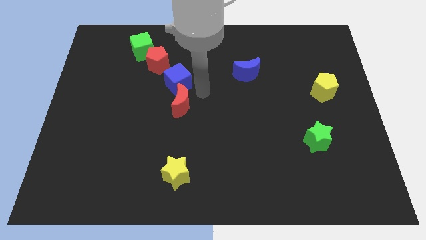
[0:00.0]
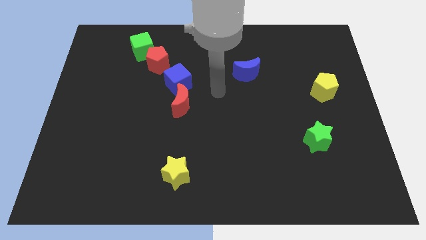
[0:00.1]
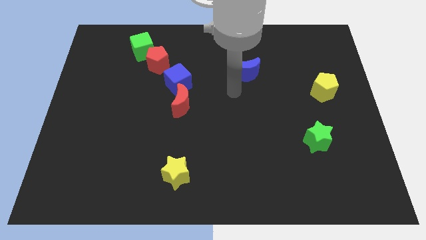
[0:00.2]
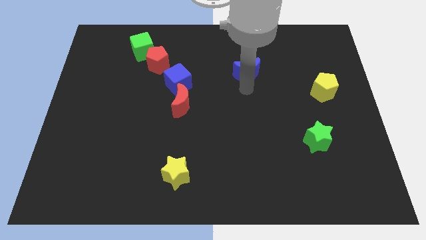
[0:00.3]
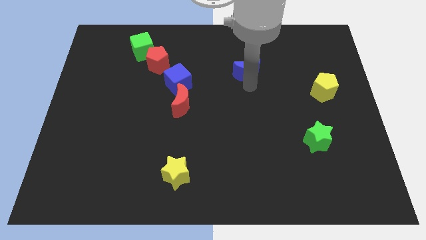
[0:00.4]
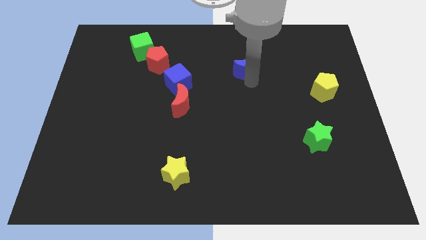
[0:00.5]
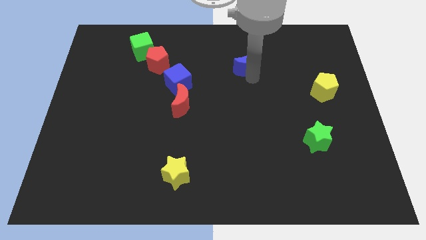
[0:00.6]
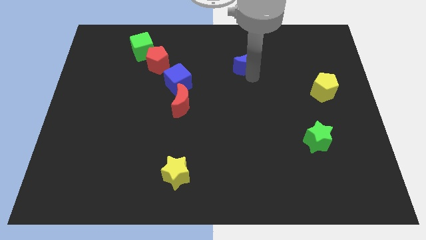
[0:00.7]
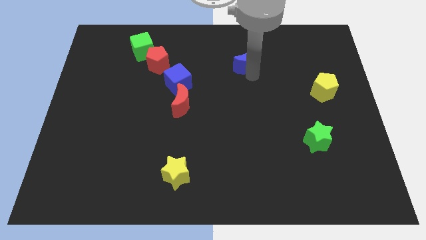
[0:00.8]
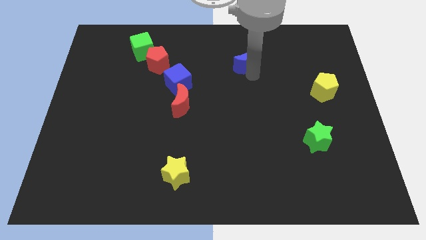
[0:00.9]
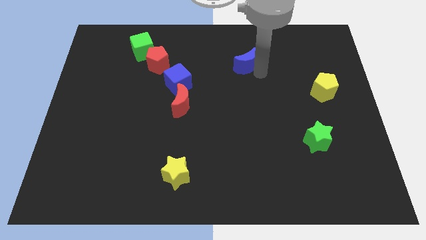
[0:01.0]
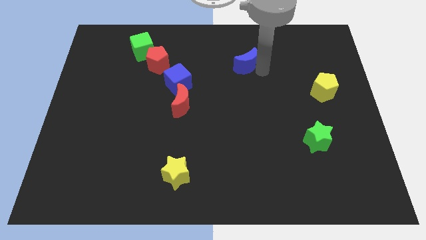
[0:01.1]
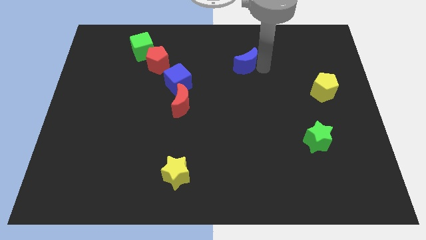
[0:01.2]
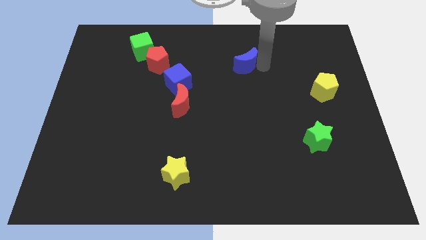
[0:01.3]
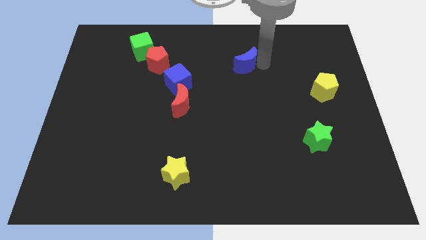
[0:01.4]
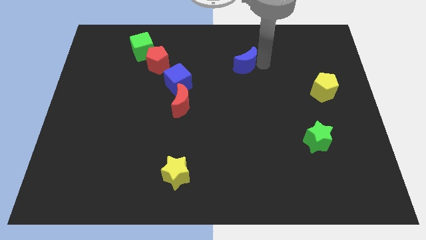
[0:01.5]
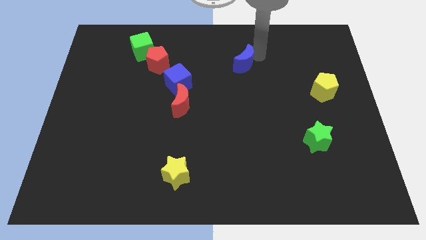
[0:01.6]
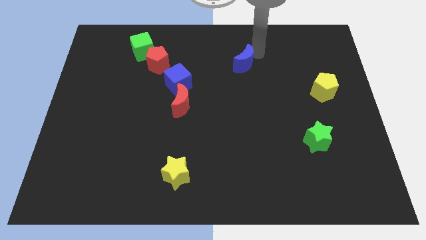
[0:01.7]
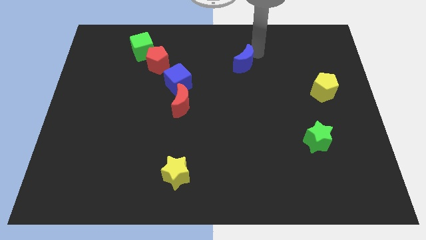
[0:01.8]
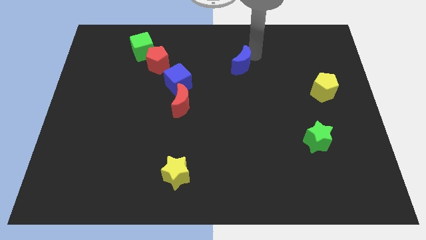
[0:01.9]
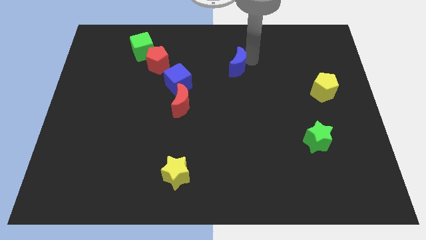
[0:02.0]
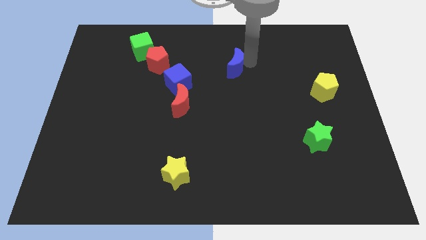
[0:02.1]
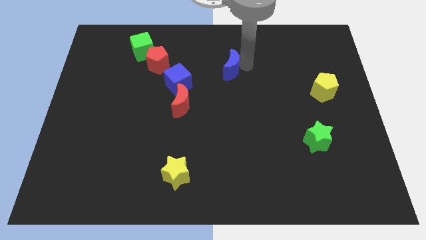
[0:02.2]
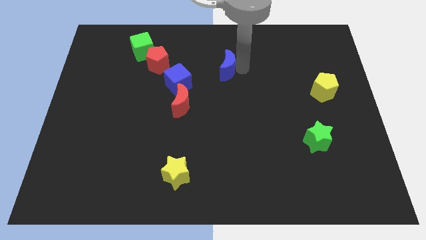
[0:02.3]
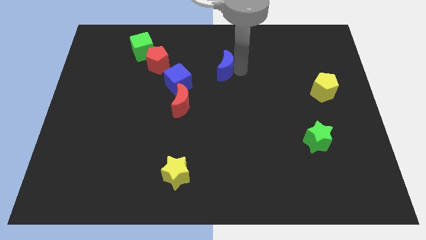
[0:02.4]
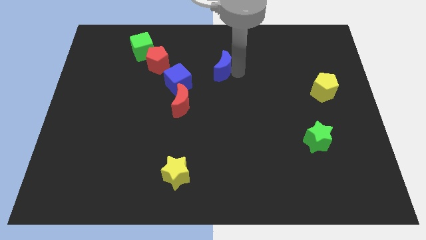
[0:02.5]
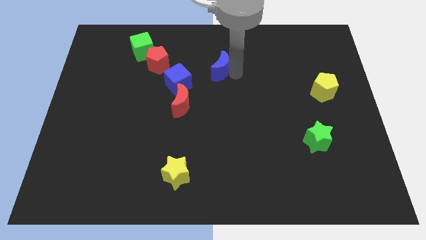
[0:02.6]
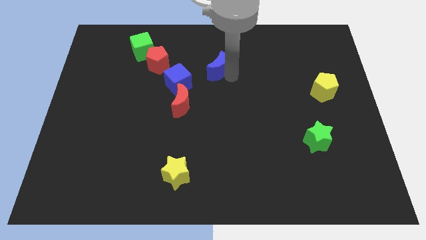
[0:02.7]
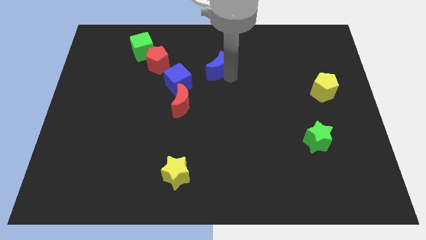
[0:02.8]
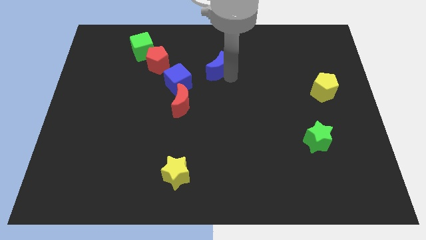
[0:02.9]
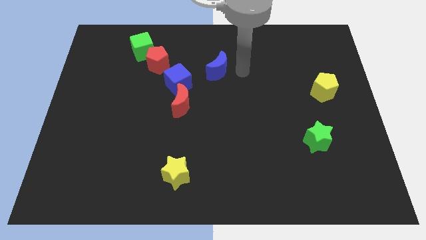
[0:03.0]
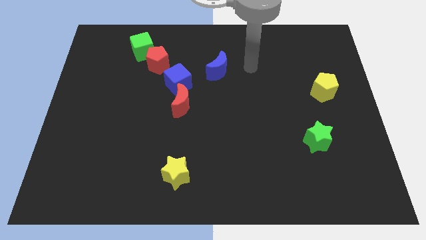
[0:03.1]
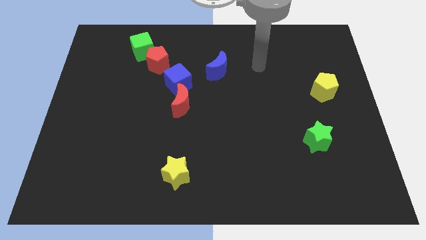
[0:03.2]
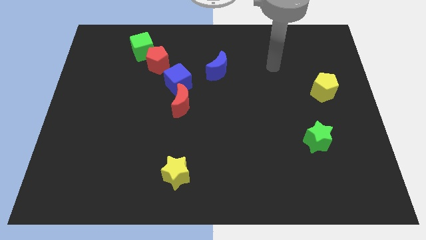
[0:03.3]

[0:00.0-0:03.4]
move blue moon to the right of the blue cube

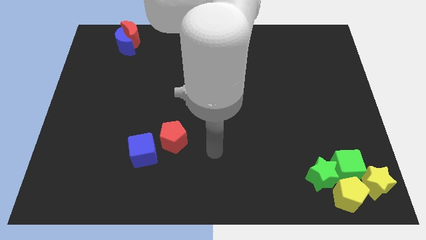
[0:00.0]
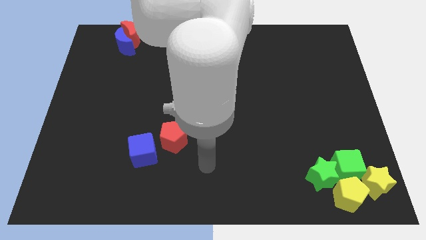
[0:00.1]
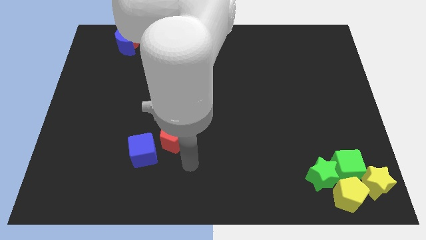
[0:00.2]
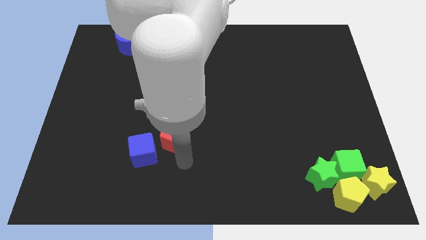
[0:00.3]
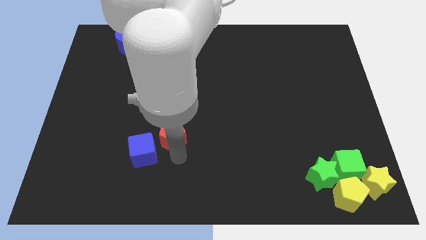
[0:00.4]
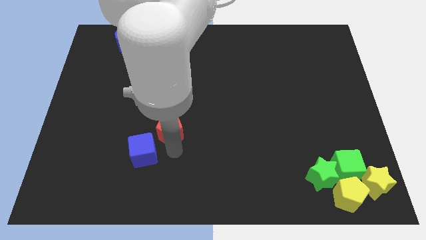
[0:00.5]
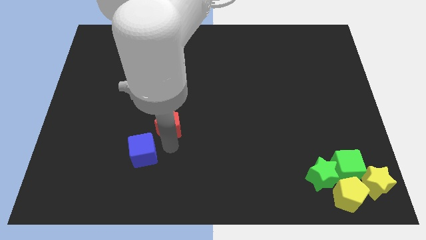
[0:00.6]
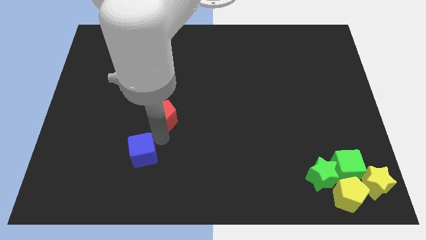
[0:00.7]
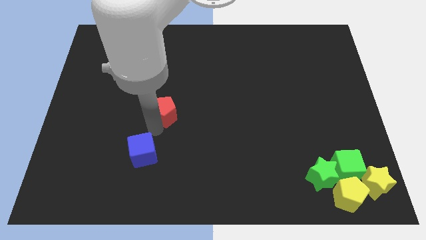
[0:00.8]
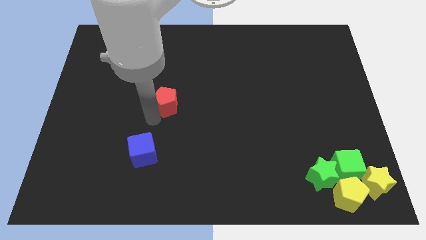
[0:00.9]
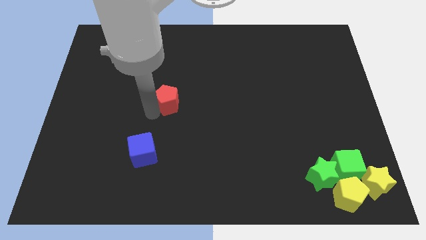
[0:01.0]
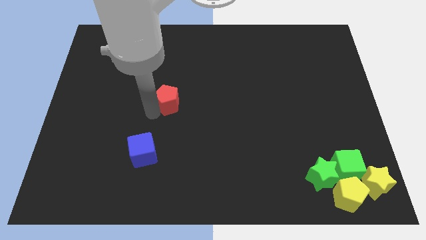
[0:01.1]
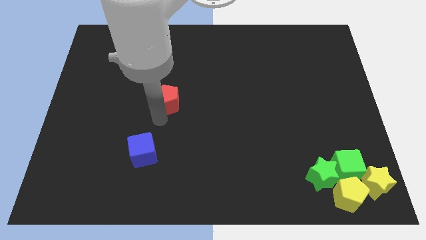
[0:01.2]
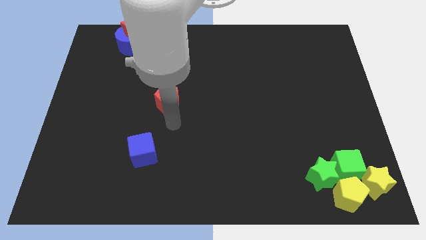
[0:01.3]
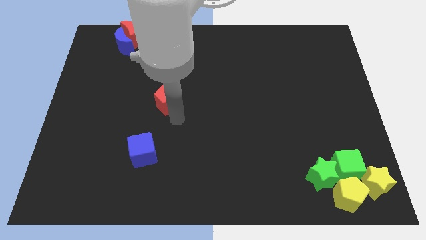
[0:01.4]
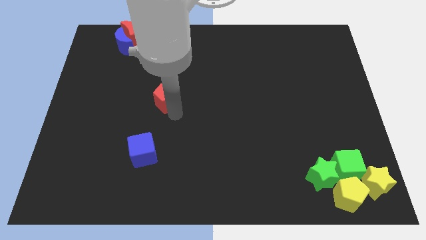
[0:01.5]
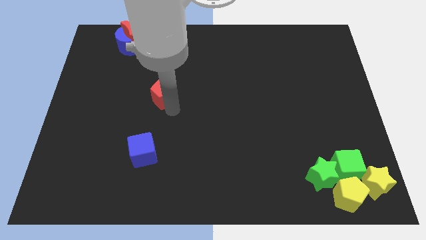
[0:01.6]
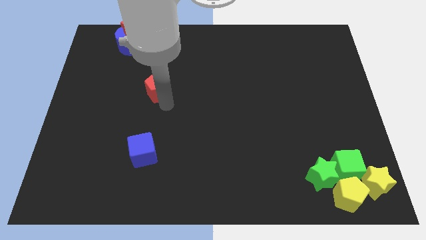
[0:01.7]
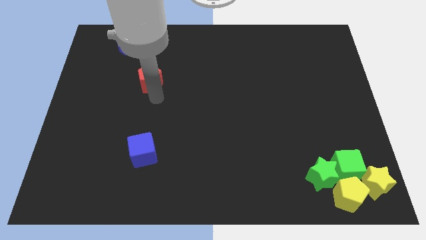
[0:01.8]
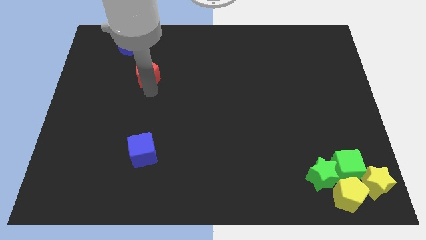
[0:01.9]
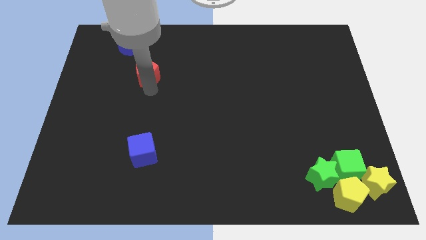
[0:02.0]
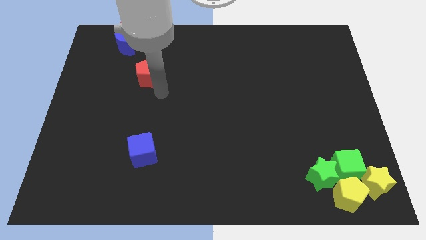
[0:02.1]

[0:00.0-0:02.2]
move the red pentagon towards red and blue moons

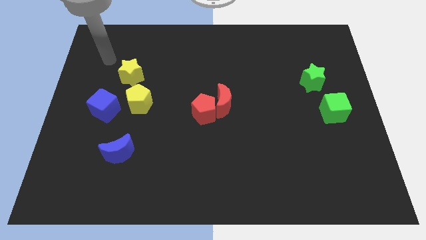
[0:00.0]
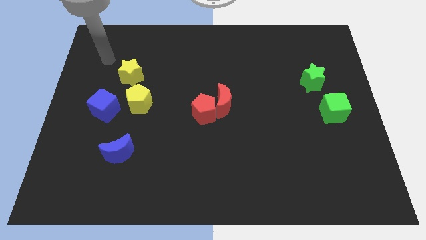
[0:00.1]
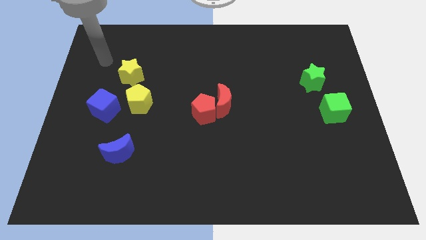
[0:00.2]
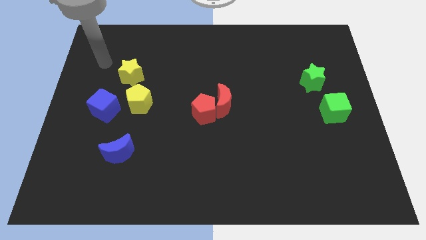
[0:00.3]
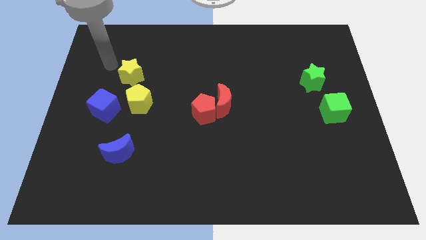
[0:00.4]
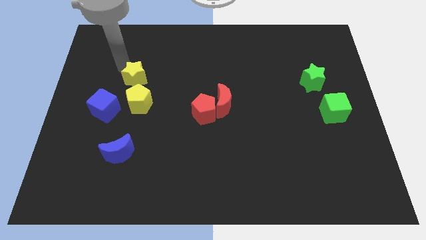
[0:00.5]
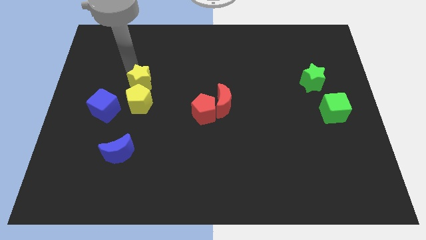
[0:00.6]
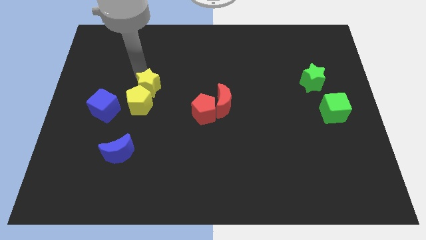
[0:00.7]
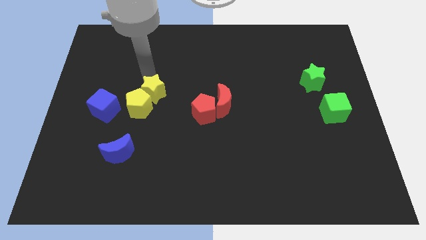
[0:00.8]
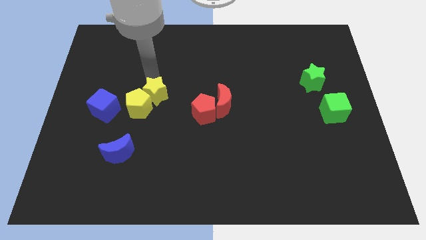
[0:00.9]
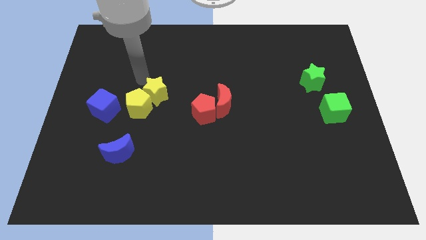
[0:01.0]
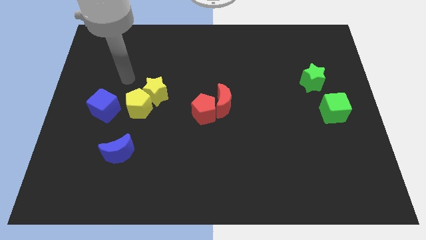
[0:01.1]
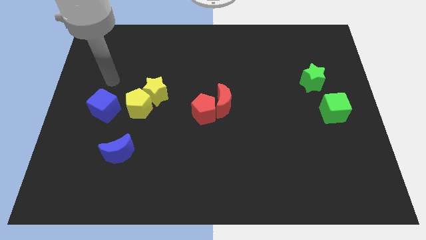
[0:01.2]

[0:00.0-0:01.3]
place the yellow star above the yellow pentagon

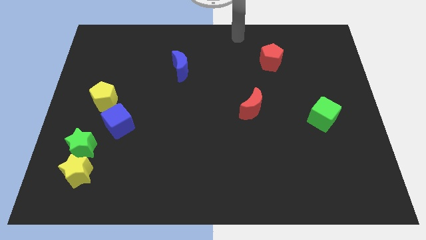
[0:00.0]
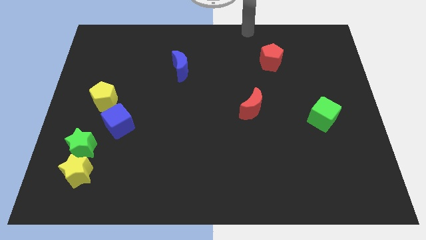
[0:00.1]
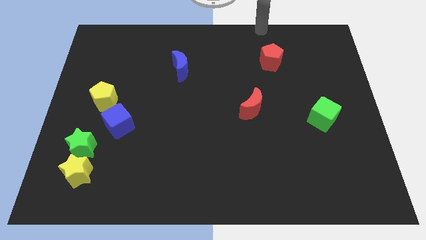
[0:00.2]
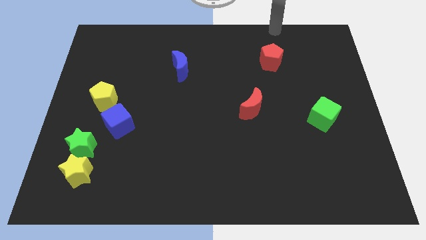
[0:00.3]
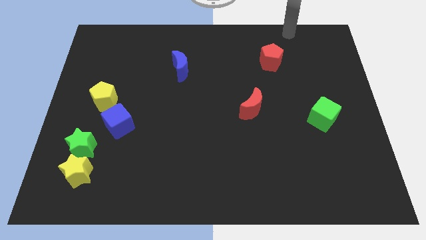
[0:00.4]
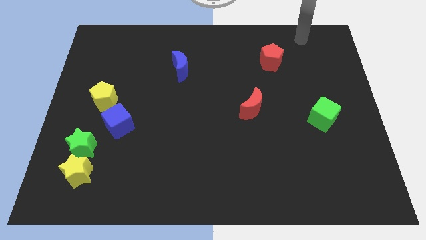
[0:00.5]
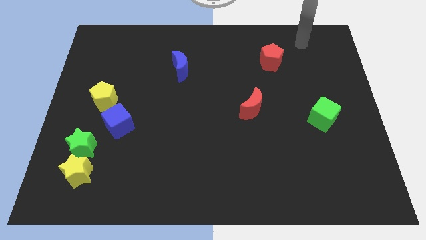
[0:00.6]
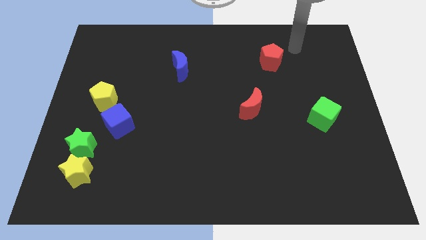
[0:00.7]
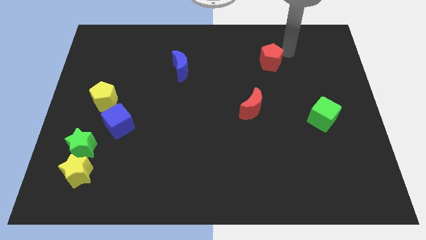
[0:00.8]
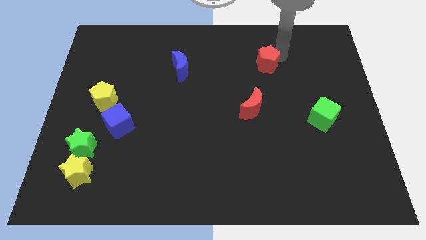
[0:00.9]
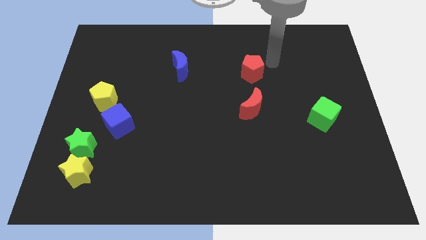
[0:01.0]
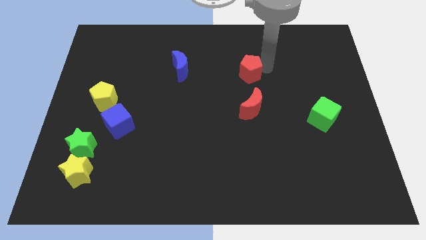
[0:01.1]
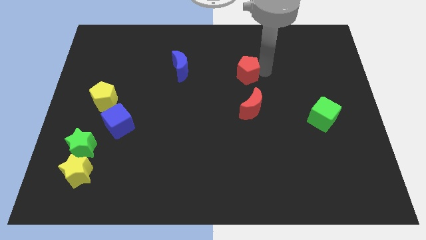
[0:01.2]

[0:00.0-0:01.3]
push the red pentagon to the top of the red crescent

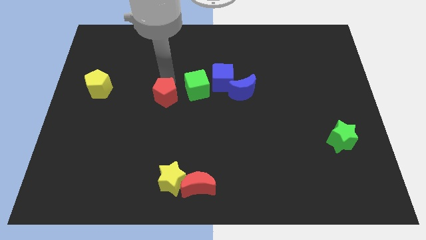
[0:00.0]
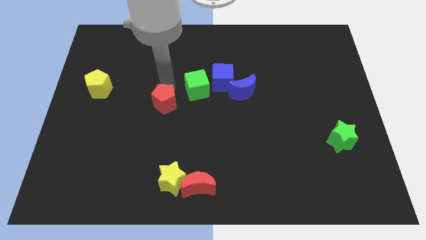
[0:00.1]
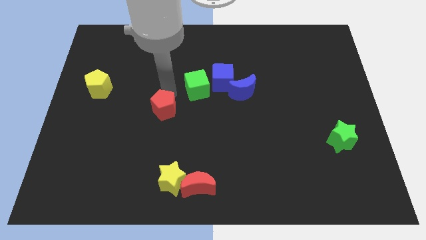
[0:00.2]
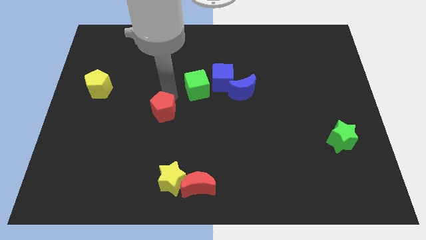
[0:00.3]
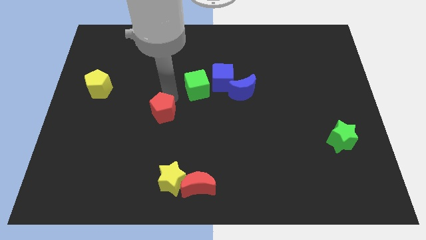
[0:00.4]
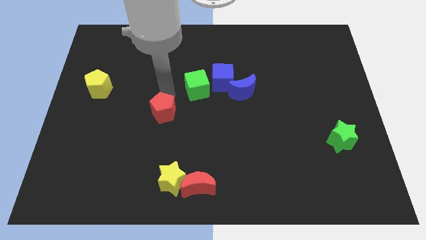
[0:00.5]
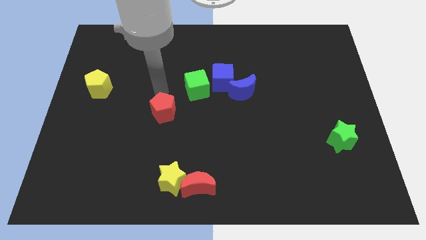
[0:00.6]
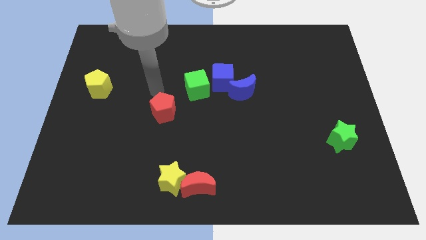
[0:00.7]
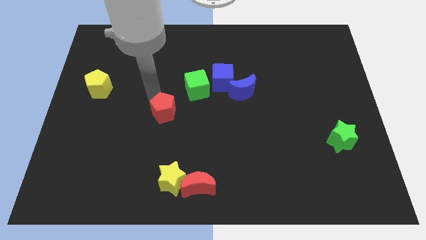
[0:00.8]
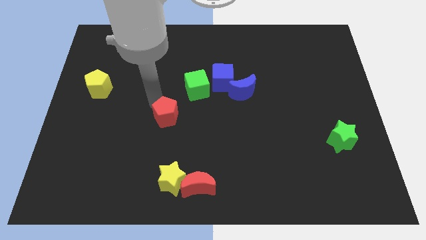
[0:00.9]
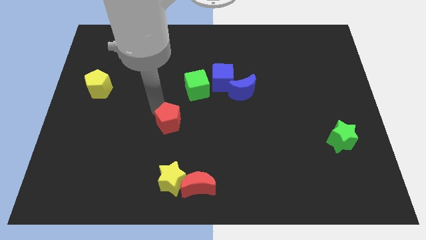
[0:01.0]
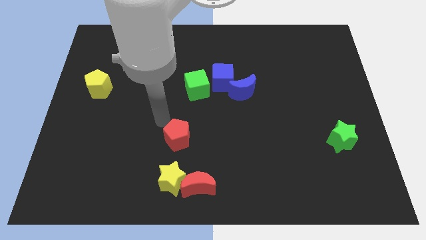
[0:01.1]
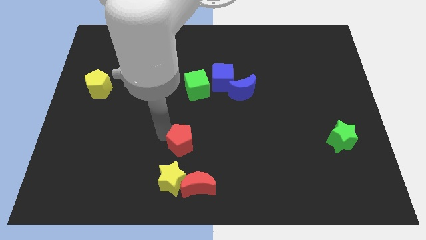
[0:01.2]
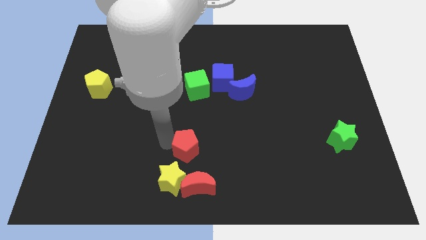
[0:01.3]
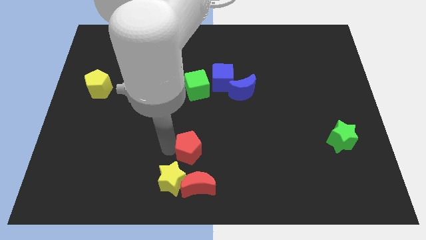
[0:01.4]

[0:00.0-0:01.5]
slide the red pentagon towards the top side of the yellow star and red moon
